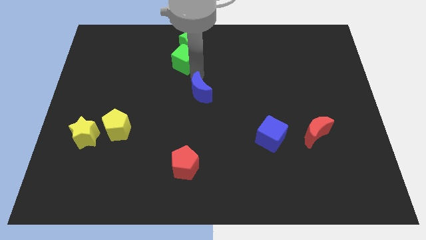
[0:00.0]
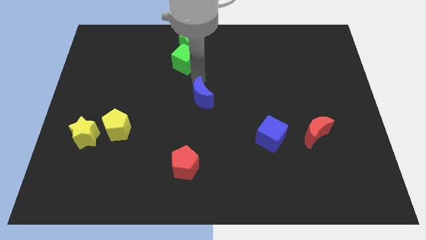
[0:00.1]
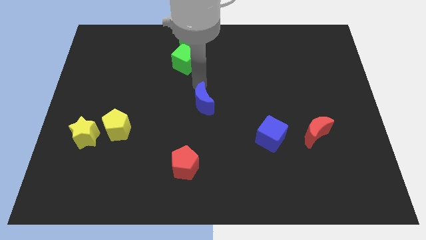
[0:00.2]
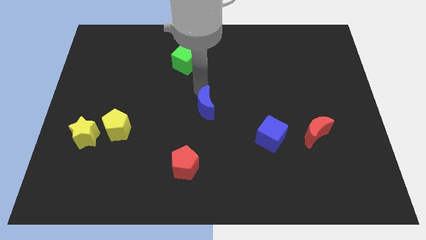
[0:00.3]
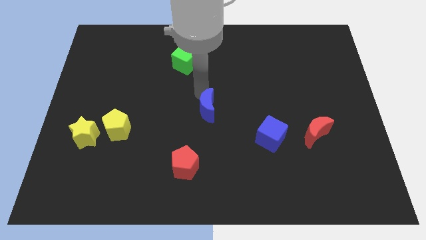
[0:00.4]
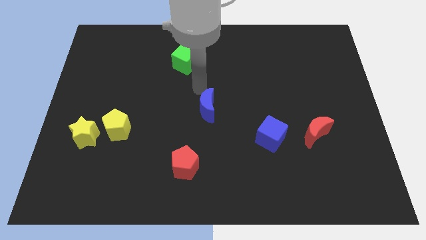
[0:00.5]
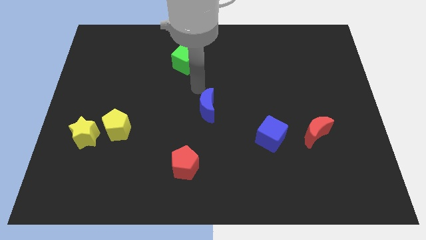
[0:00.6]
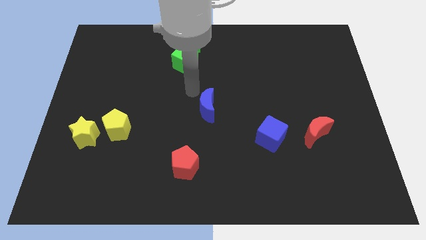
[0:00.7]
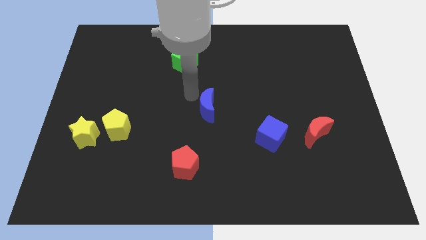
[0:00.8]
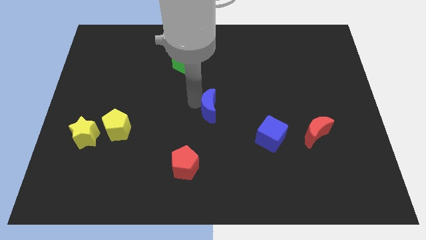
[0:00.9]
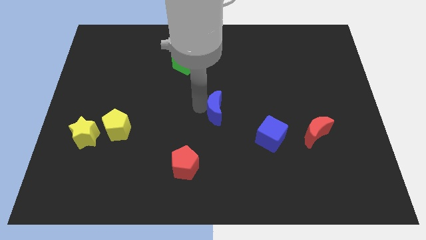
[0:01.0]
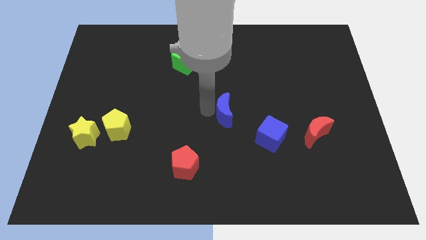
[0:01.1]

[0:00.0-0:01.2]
push the blue crescent to the center of the board

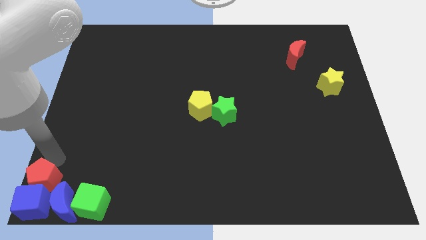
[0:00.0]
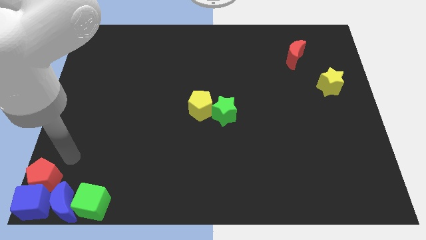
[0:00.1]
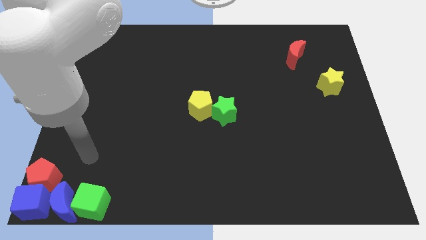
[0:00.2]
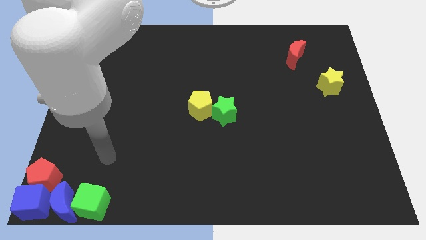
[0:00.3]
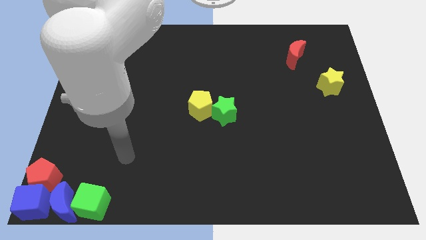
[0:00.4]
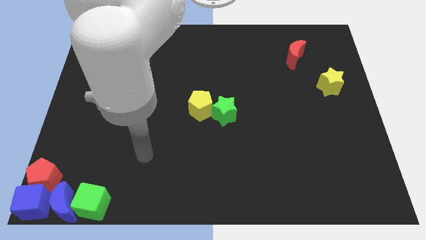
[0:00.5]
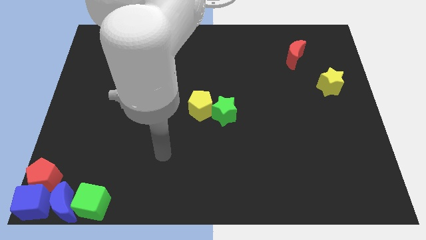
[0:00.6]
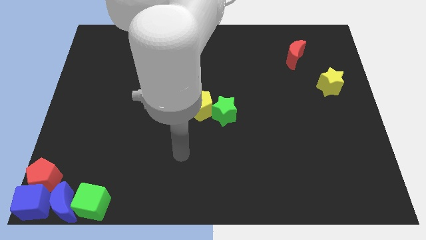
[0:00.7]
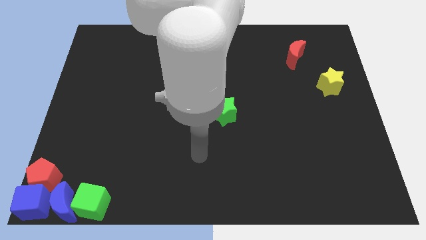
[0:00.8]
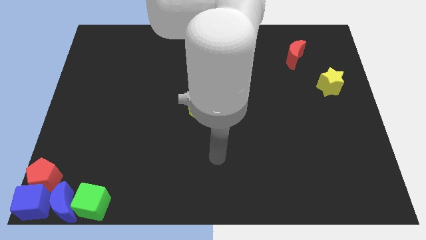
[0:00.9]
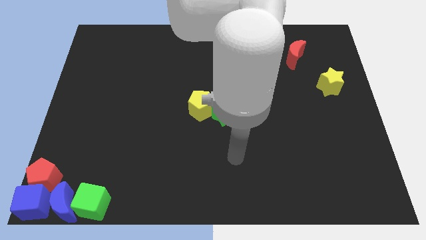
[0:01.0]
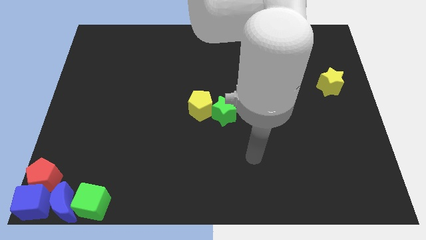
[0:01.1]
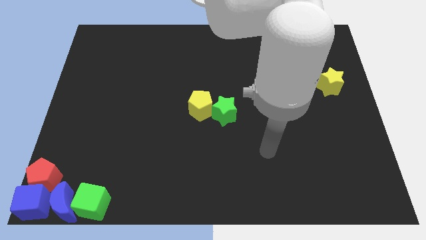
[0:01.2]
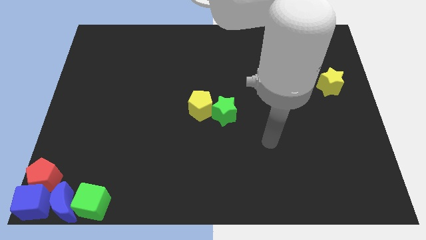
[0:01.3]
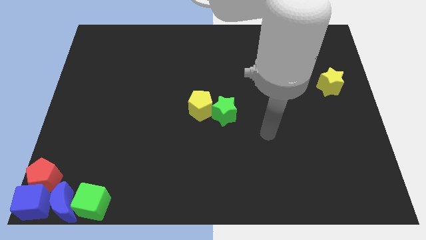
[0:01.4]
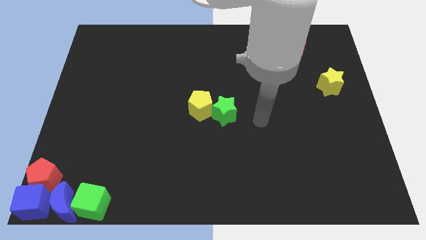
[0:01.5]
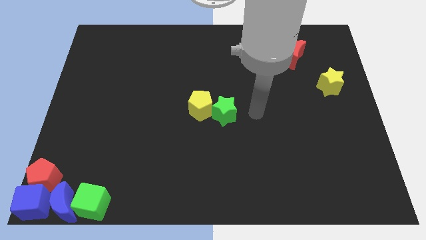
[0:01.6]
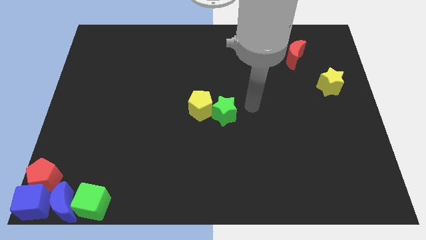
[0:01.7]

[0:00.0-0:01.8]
go to the right side of the green star

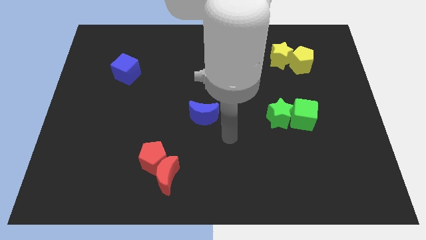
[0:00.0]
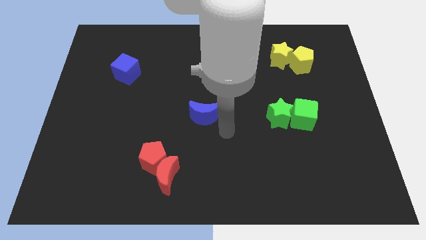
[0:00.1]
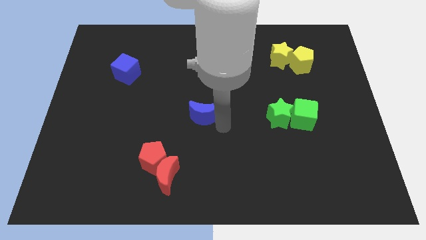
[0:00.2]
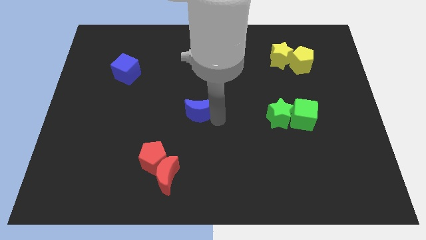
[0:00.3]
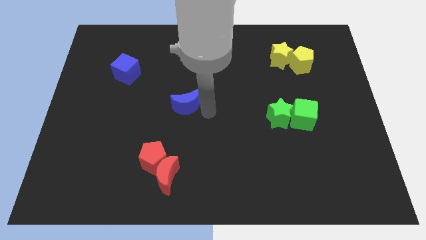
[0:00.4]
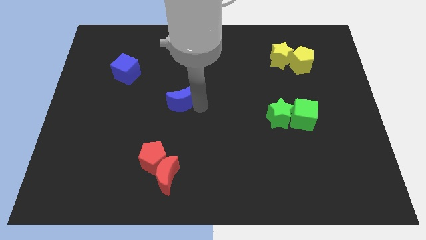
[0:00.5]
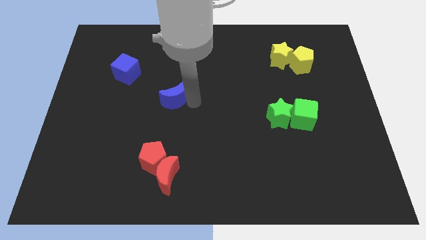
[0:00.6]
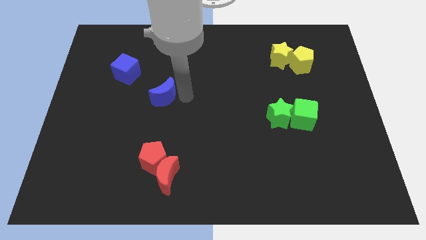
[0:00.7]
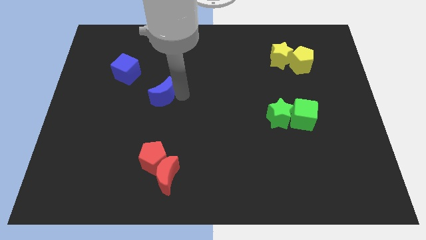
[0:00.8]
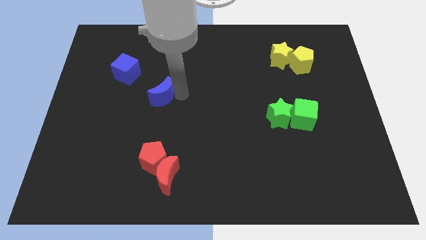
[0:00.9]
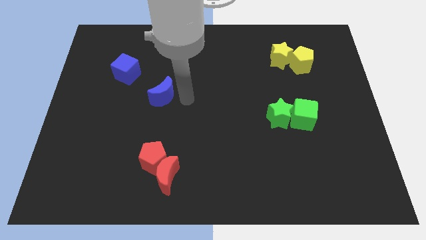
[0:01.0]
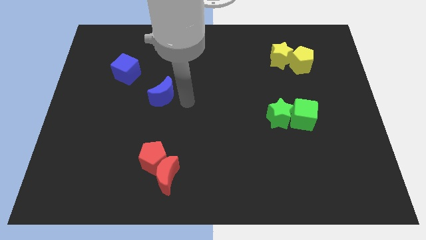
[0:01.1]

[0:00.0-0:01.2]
move blue moon towards blue cube

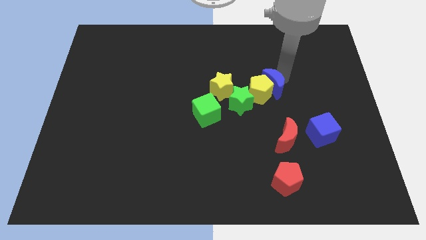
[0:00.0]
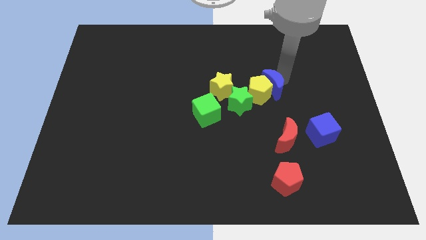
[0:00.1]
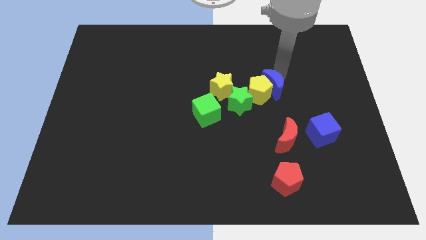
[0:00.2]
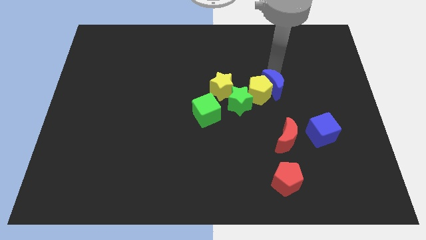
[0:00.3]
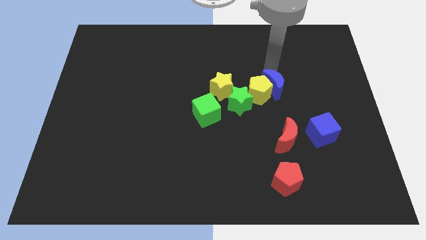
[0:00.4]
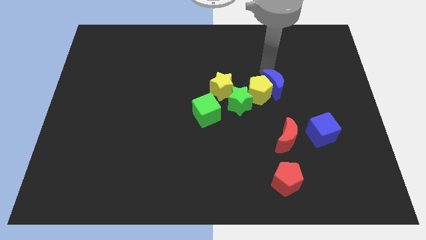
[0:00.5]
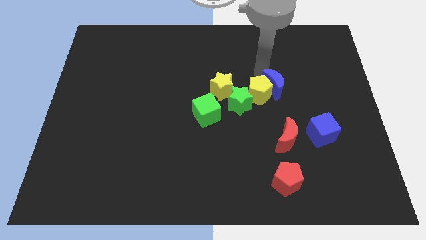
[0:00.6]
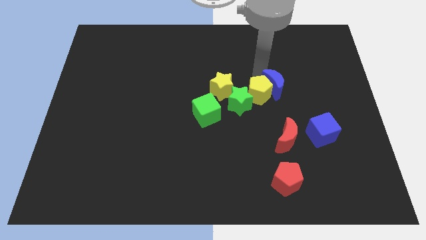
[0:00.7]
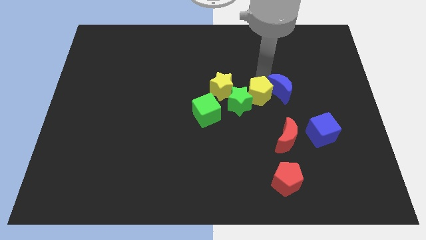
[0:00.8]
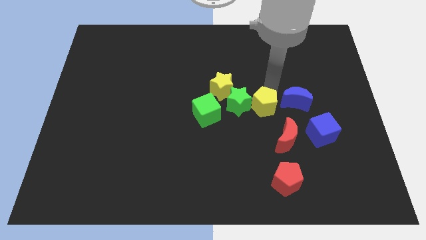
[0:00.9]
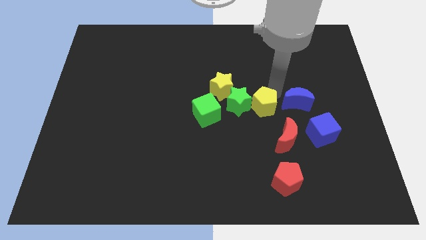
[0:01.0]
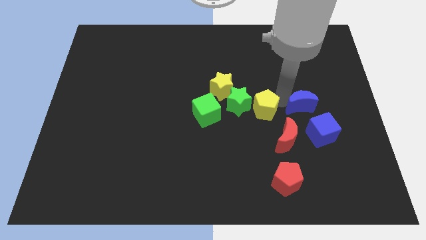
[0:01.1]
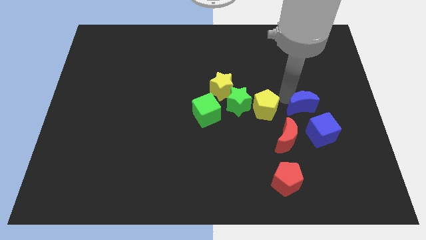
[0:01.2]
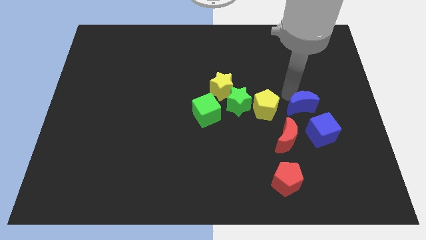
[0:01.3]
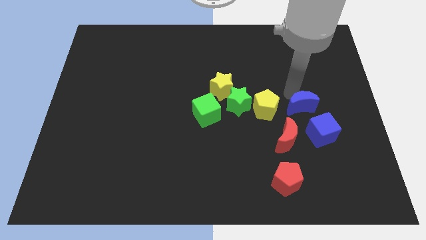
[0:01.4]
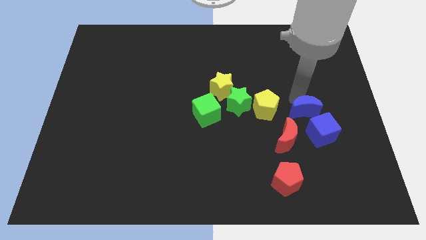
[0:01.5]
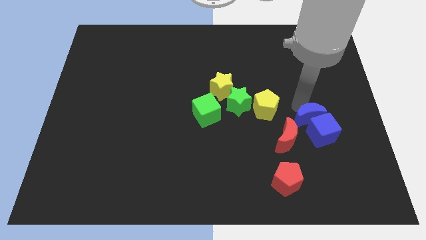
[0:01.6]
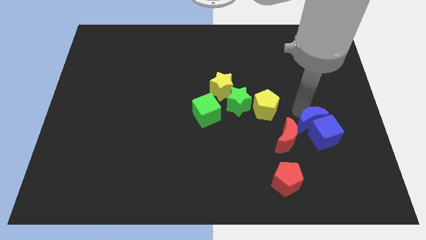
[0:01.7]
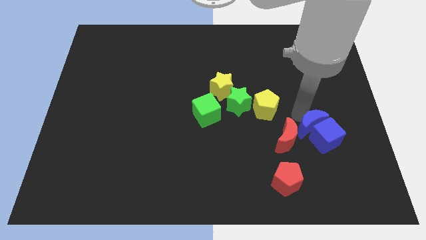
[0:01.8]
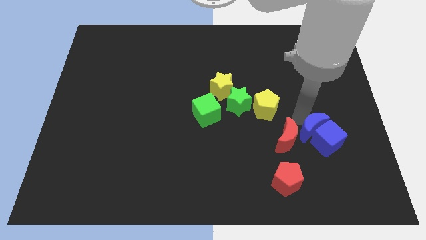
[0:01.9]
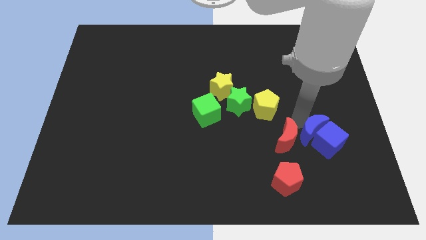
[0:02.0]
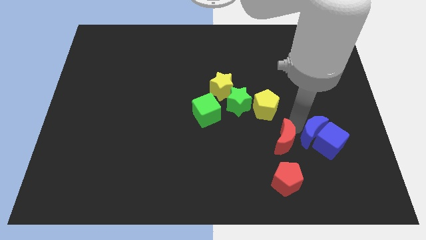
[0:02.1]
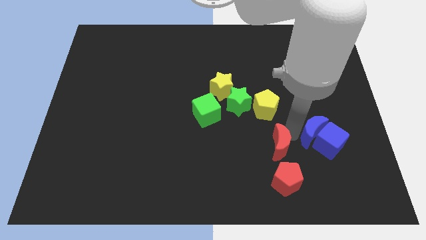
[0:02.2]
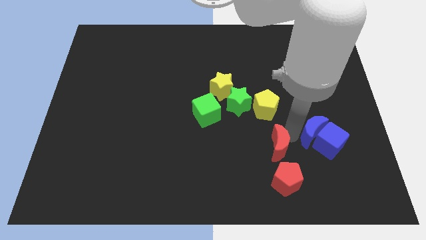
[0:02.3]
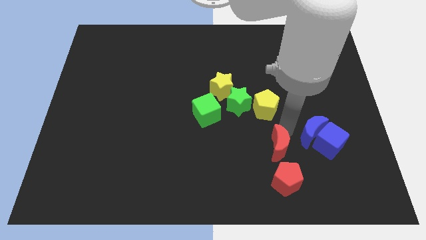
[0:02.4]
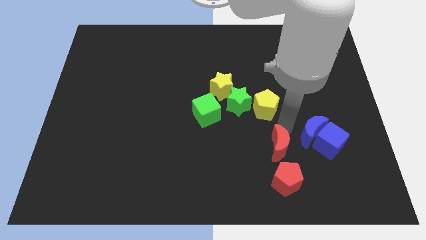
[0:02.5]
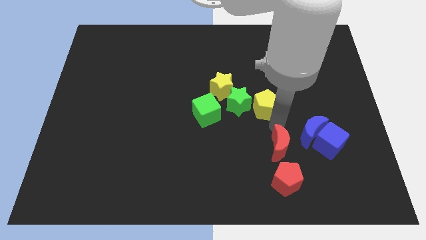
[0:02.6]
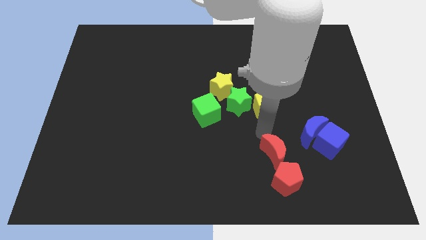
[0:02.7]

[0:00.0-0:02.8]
push group of blocks downward

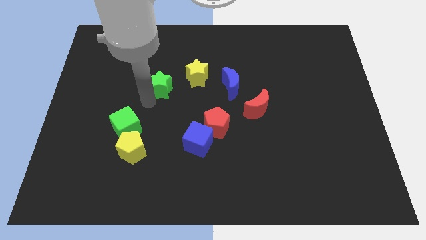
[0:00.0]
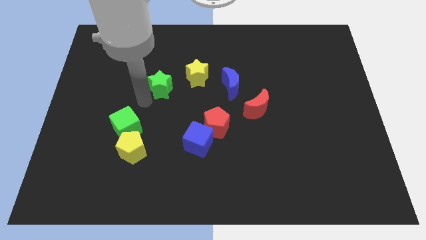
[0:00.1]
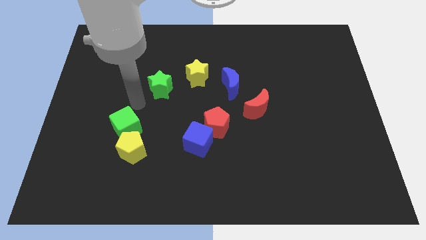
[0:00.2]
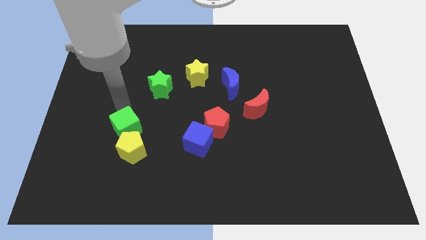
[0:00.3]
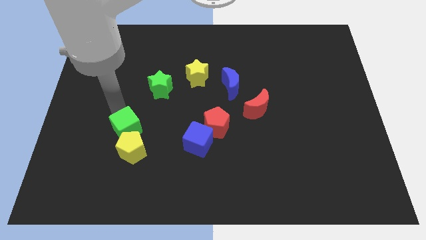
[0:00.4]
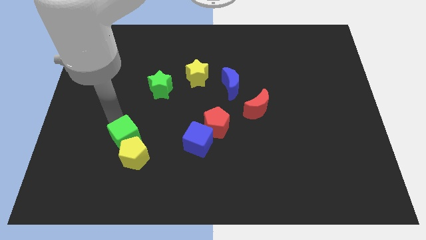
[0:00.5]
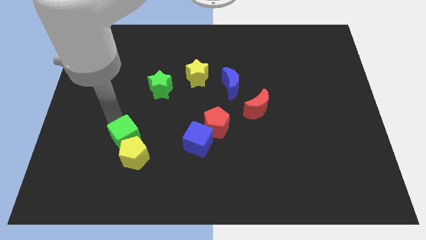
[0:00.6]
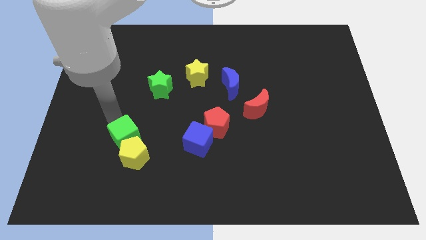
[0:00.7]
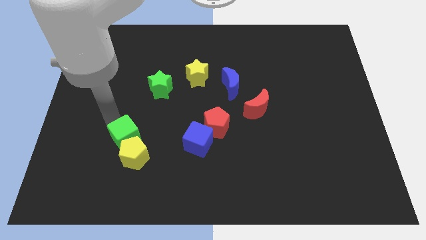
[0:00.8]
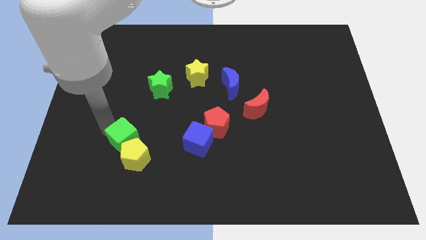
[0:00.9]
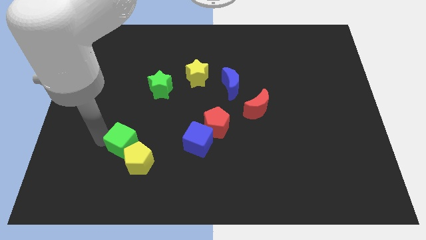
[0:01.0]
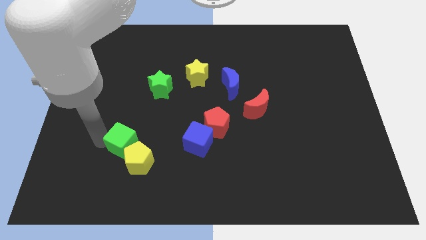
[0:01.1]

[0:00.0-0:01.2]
push the green cube into the yellow pentagon

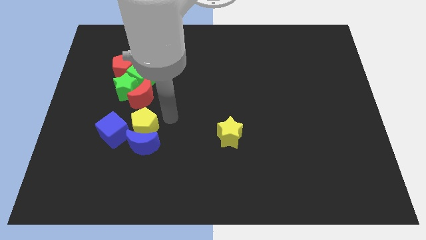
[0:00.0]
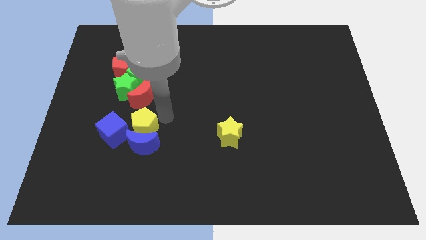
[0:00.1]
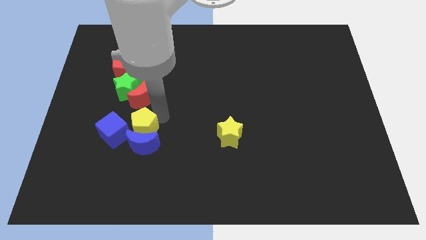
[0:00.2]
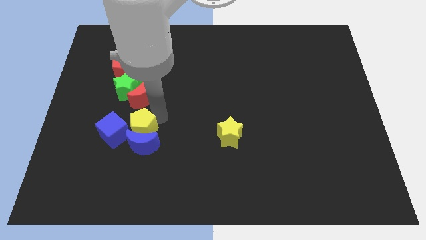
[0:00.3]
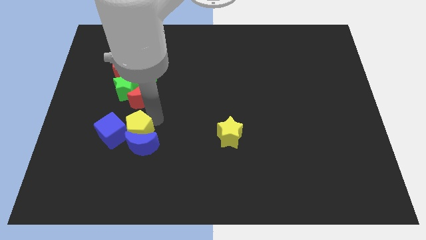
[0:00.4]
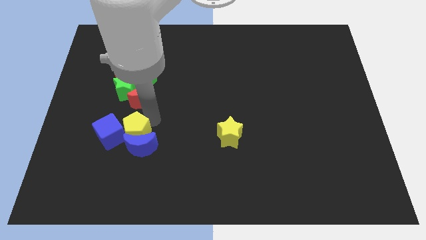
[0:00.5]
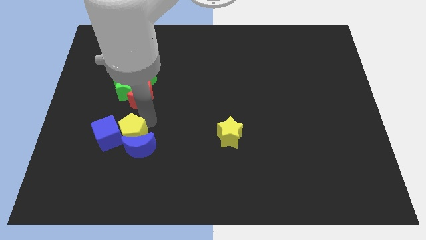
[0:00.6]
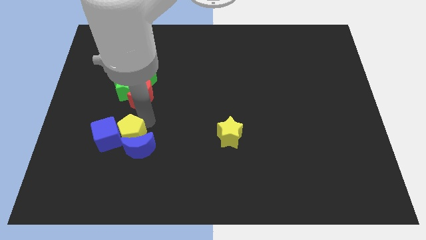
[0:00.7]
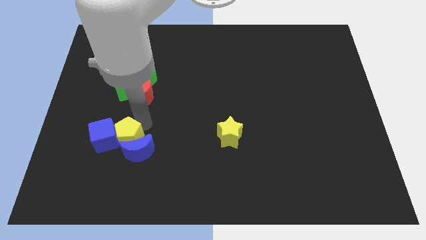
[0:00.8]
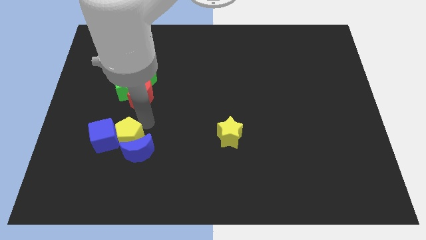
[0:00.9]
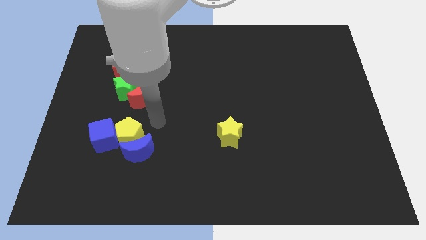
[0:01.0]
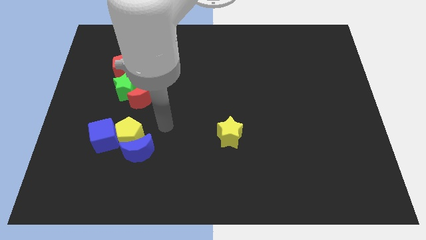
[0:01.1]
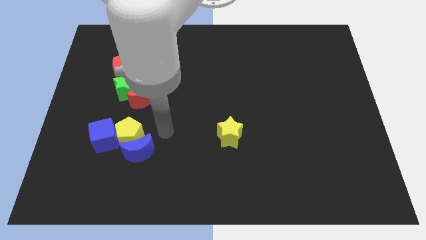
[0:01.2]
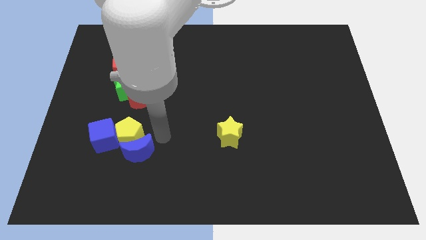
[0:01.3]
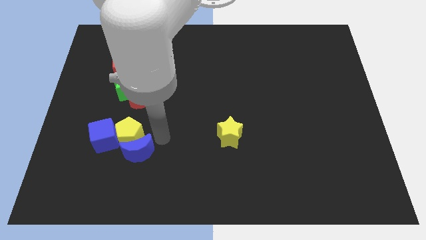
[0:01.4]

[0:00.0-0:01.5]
push the yellow pentagon into the blue blocks
